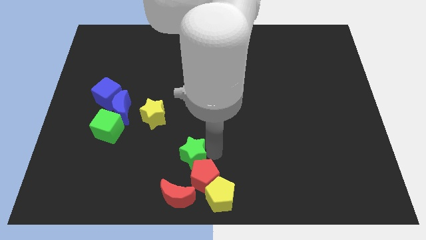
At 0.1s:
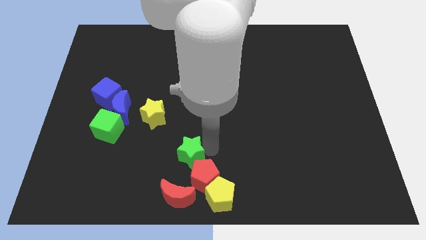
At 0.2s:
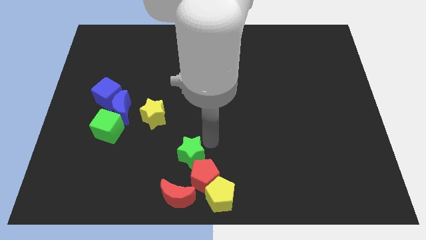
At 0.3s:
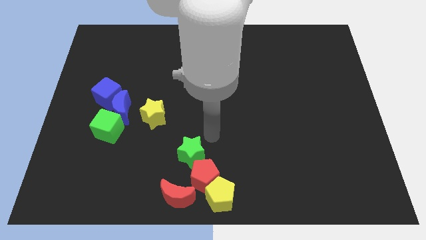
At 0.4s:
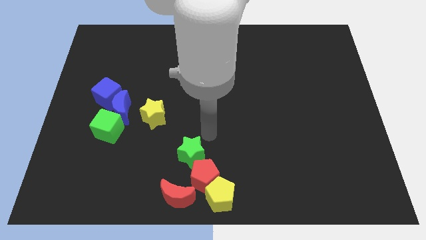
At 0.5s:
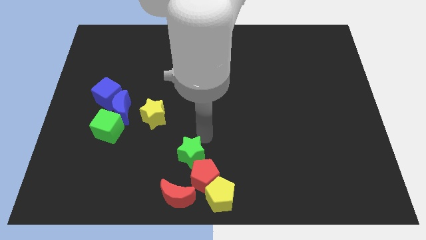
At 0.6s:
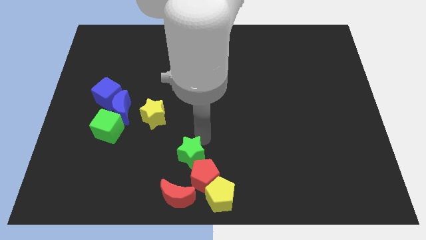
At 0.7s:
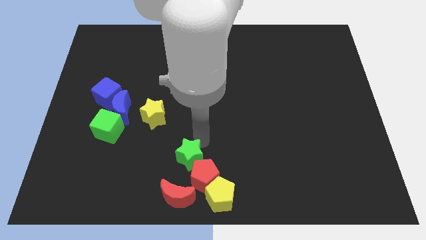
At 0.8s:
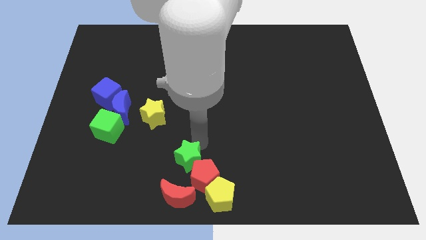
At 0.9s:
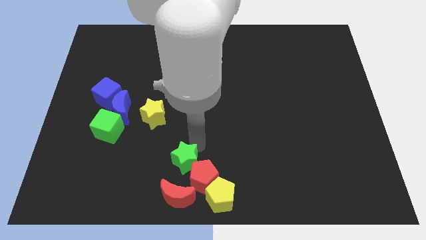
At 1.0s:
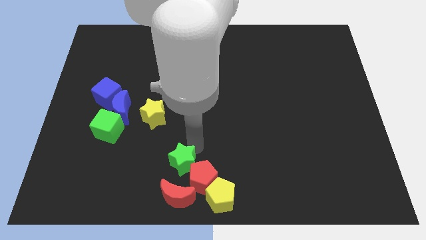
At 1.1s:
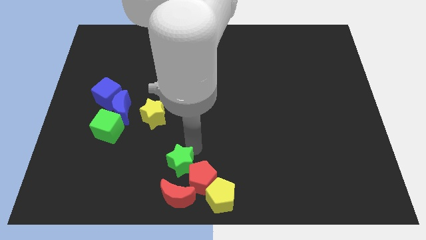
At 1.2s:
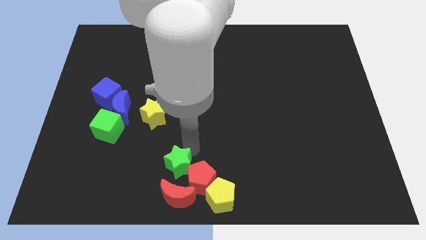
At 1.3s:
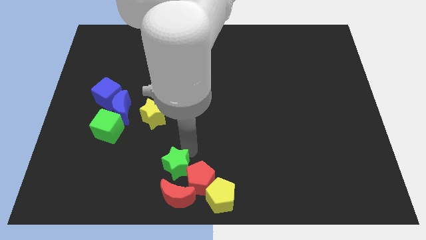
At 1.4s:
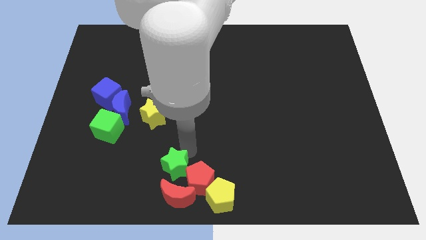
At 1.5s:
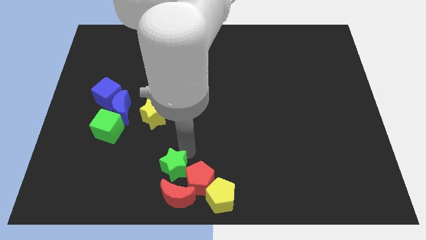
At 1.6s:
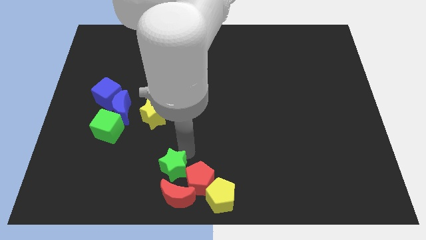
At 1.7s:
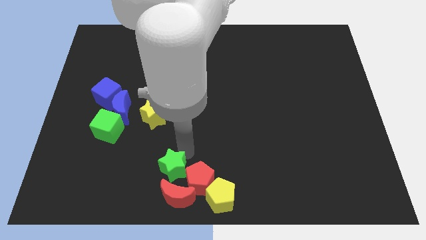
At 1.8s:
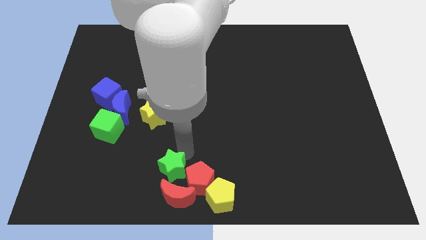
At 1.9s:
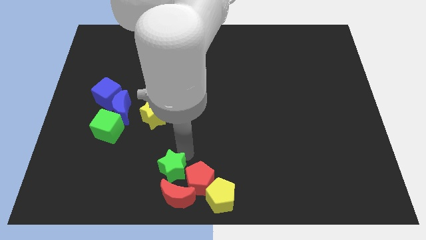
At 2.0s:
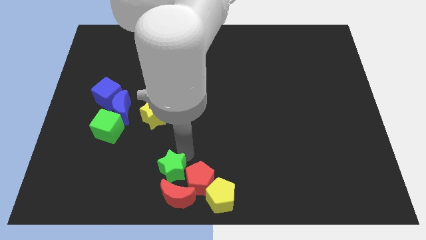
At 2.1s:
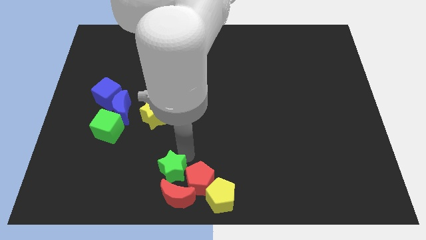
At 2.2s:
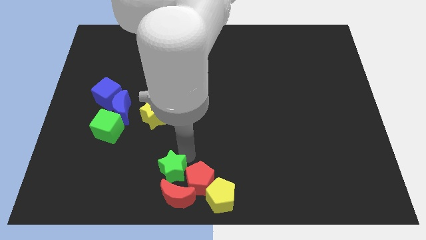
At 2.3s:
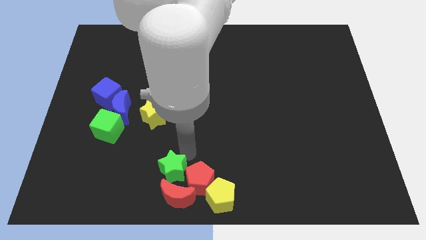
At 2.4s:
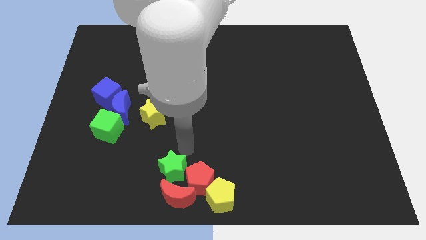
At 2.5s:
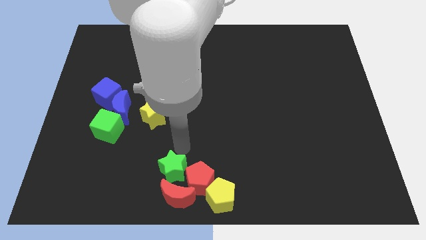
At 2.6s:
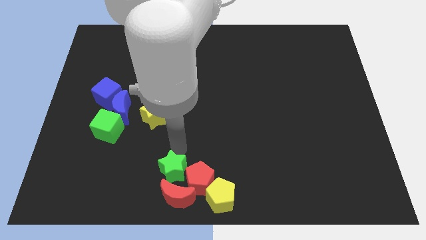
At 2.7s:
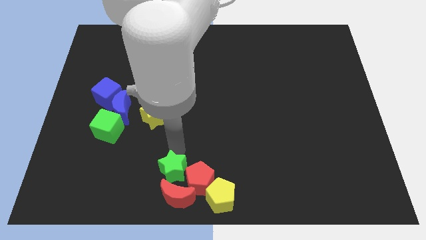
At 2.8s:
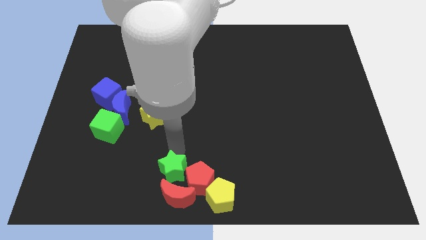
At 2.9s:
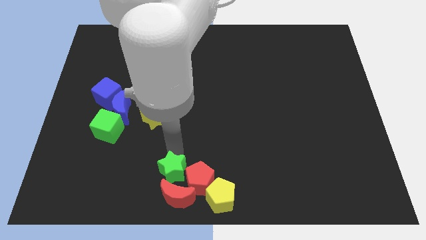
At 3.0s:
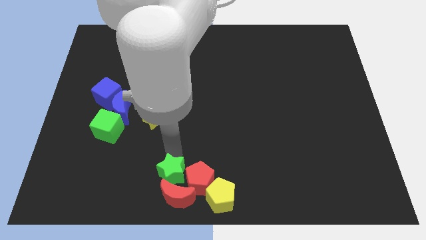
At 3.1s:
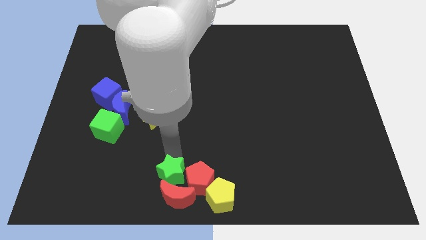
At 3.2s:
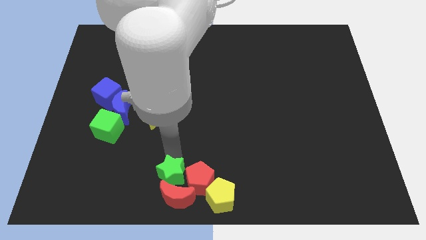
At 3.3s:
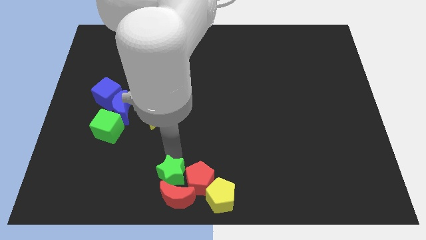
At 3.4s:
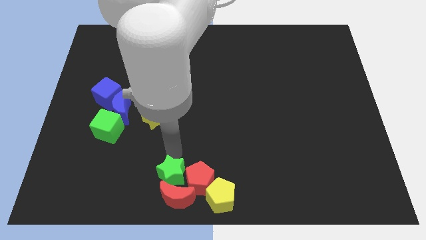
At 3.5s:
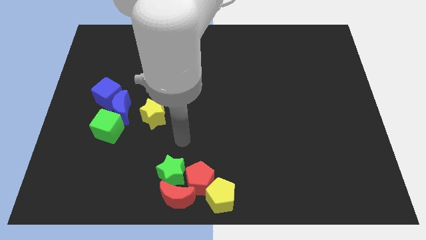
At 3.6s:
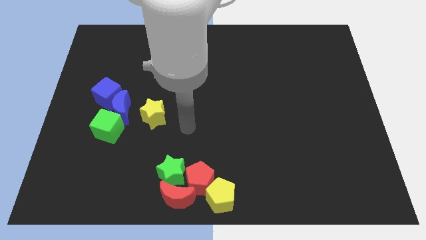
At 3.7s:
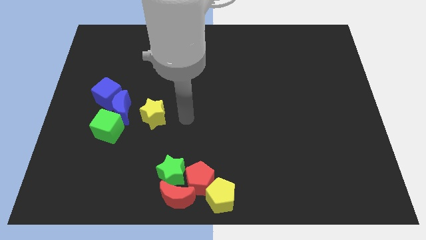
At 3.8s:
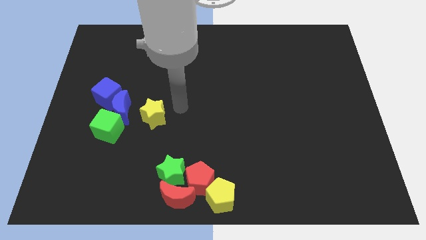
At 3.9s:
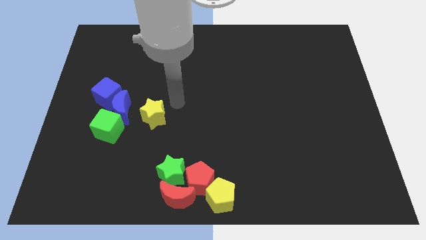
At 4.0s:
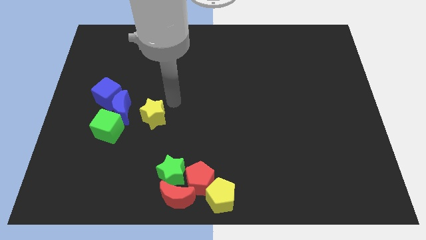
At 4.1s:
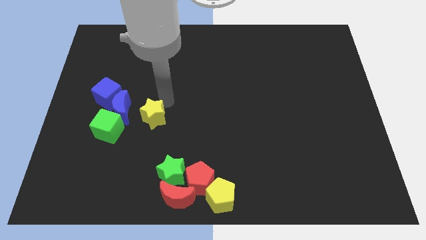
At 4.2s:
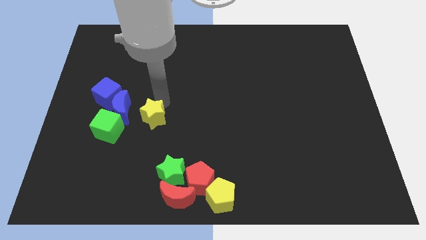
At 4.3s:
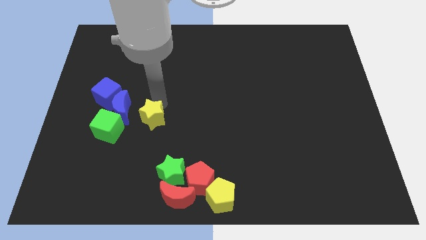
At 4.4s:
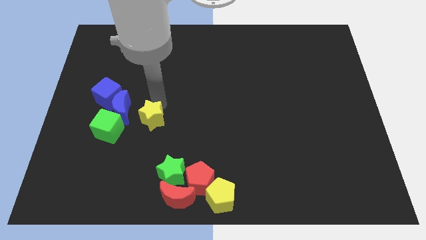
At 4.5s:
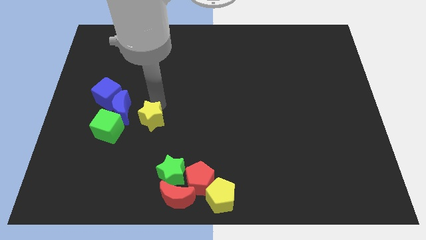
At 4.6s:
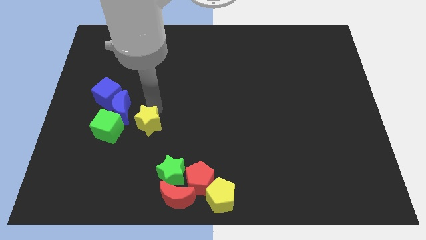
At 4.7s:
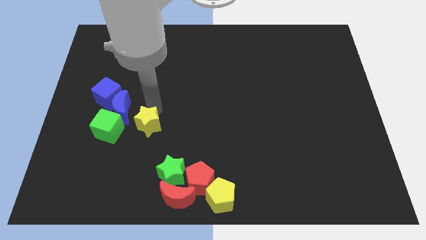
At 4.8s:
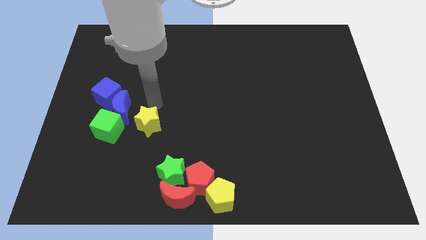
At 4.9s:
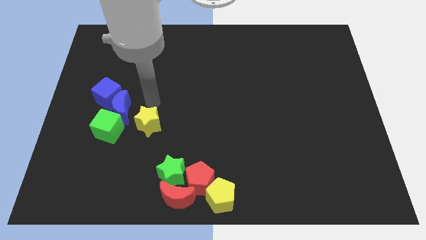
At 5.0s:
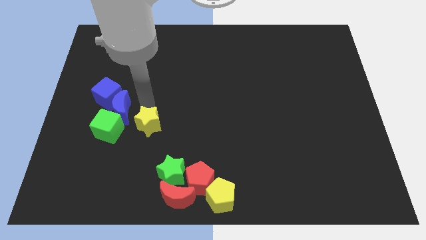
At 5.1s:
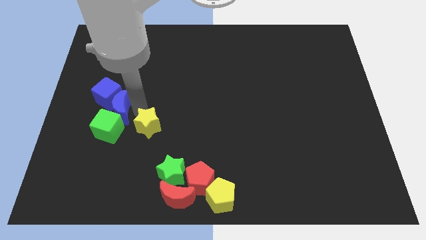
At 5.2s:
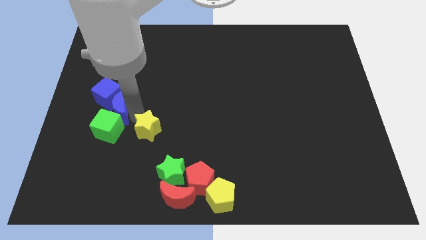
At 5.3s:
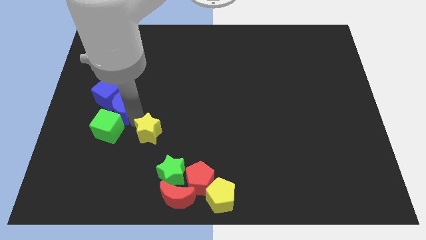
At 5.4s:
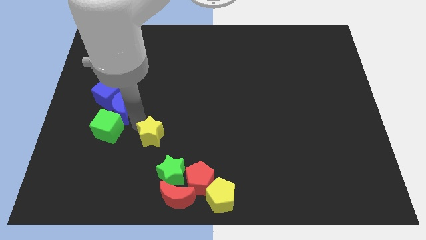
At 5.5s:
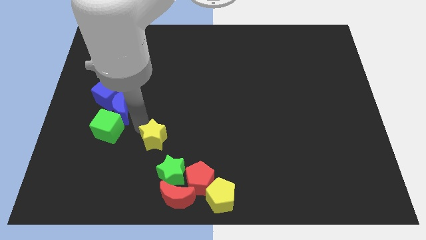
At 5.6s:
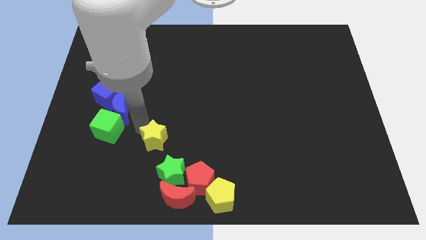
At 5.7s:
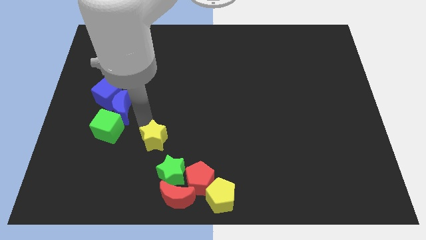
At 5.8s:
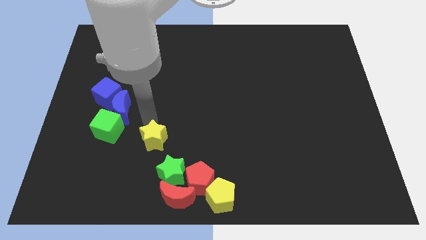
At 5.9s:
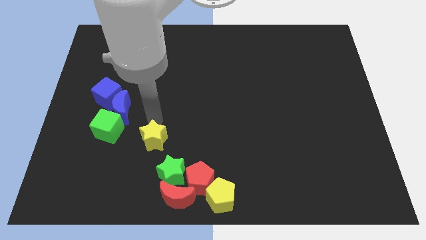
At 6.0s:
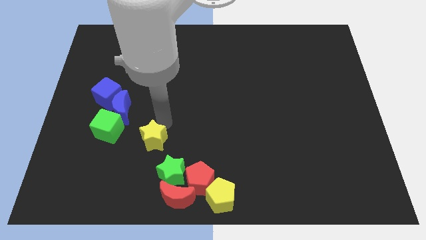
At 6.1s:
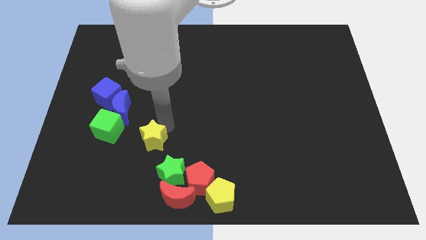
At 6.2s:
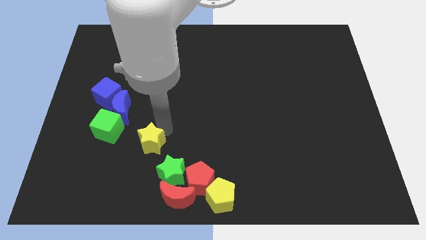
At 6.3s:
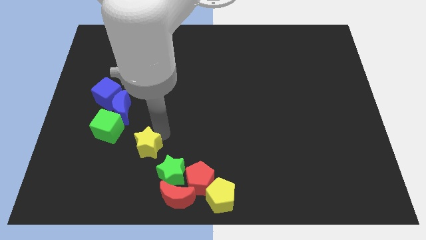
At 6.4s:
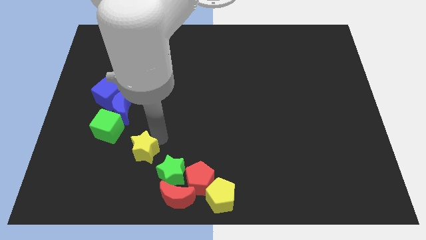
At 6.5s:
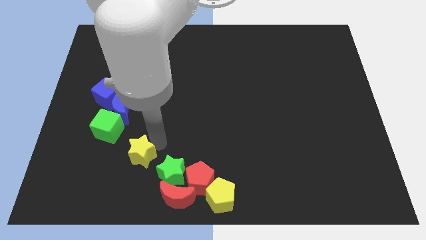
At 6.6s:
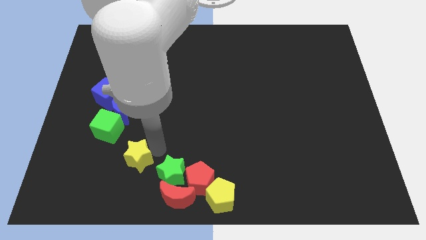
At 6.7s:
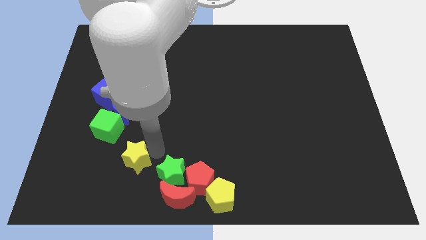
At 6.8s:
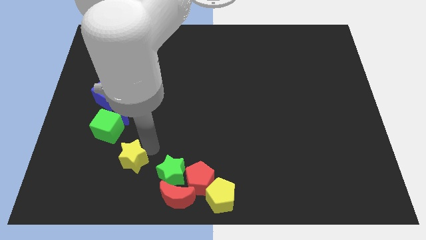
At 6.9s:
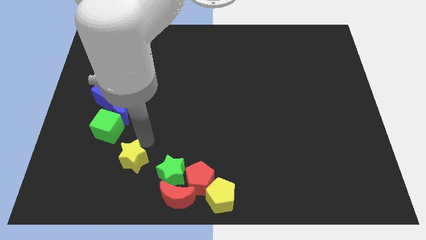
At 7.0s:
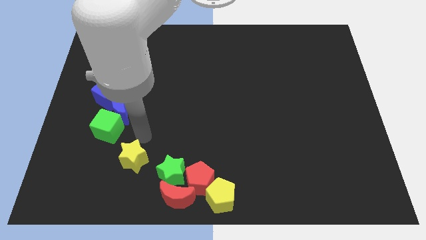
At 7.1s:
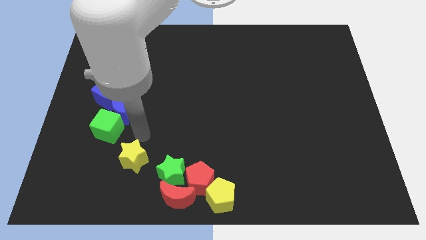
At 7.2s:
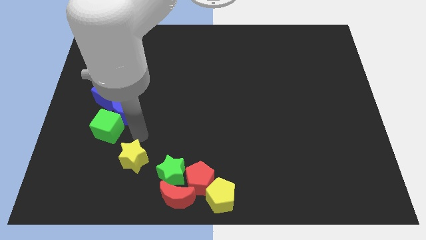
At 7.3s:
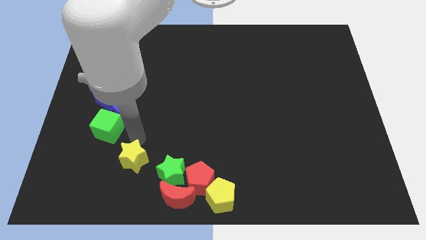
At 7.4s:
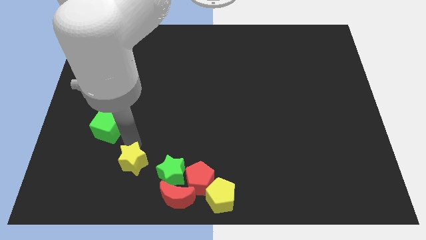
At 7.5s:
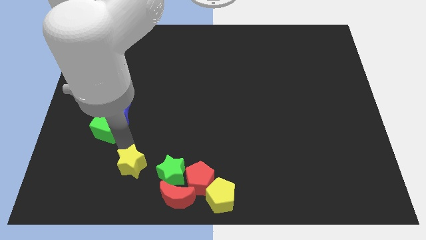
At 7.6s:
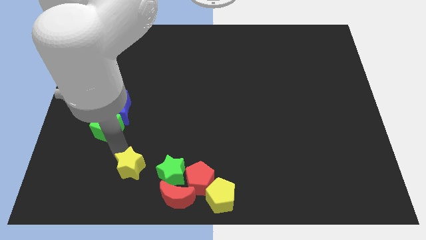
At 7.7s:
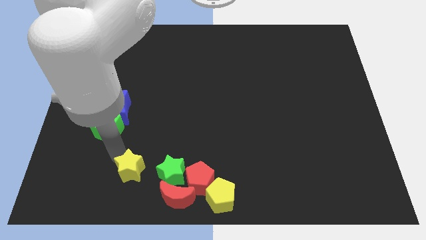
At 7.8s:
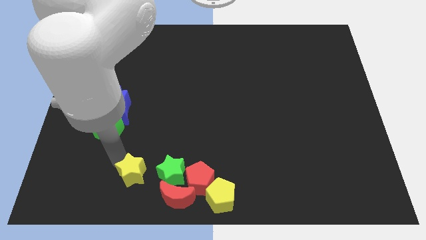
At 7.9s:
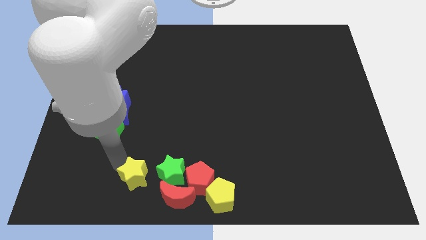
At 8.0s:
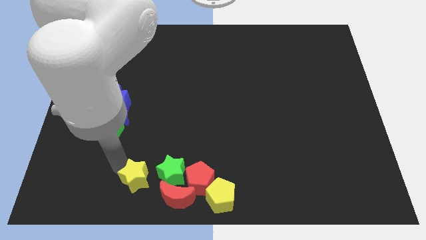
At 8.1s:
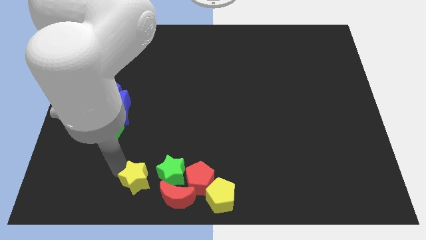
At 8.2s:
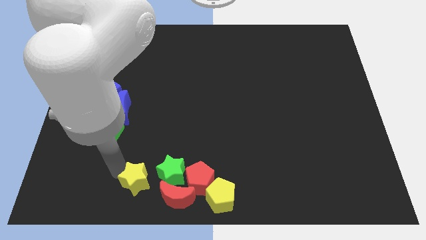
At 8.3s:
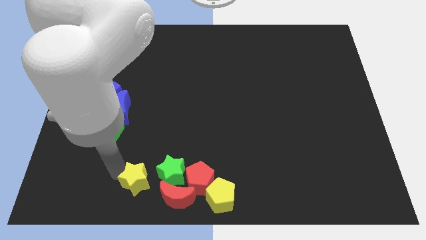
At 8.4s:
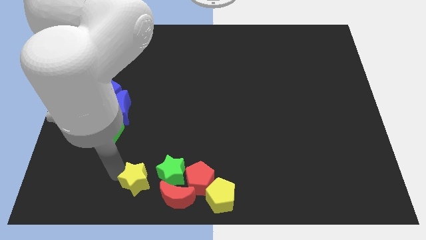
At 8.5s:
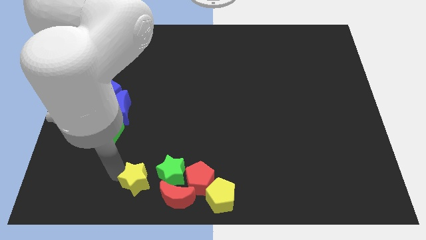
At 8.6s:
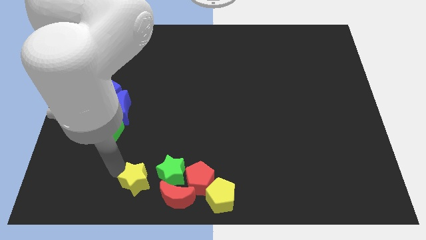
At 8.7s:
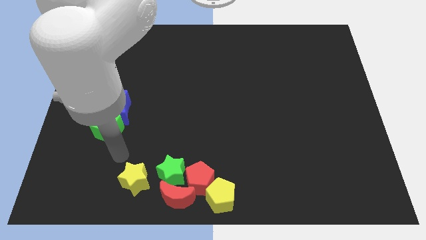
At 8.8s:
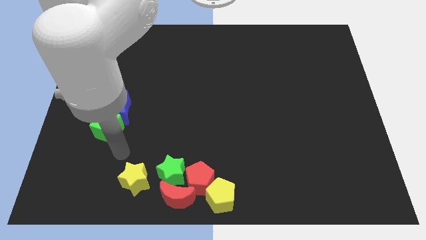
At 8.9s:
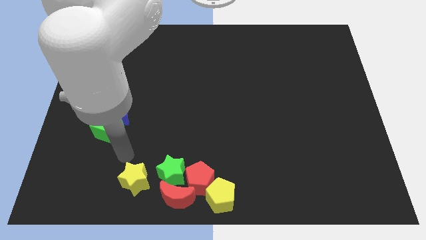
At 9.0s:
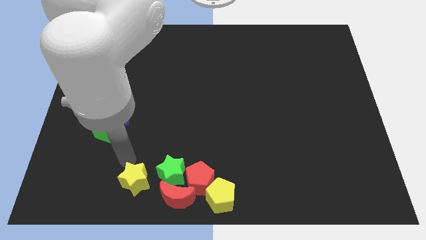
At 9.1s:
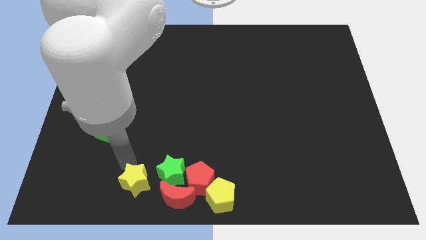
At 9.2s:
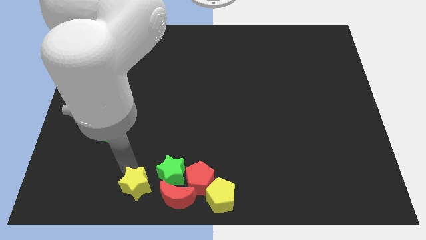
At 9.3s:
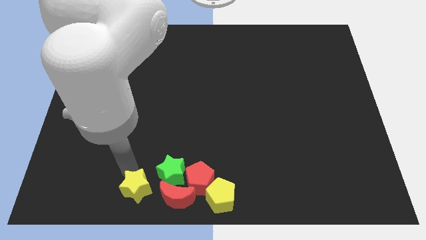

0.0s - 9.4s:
move the yellow star left beside the red crescent
